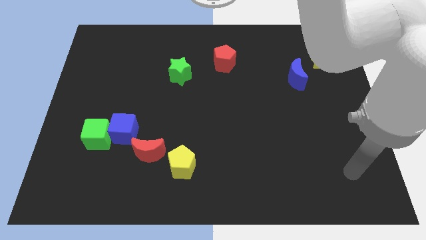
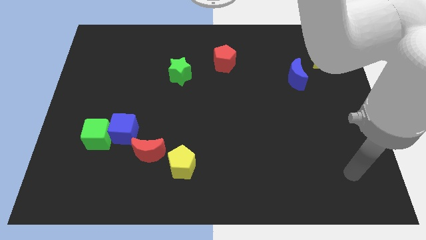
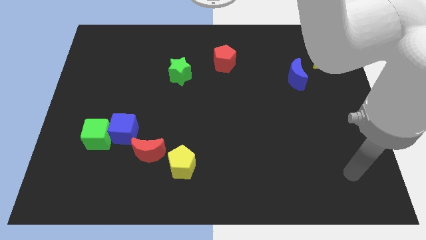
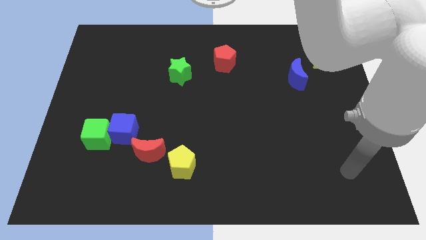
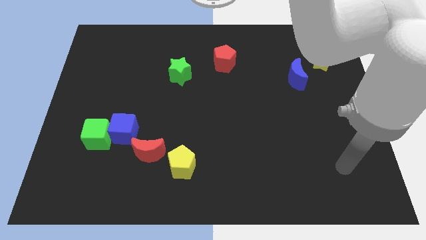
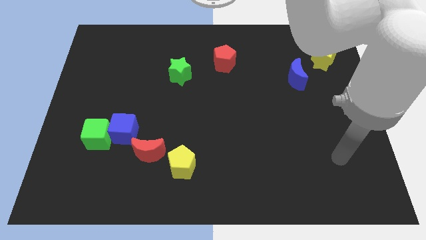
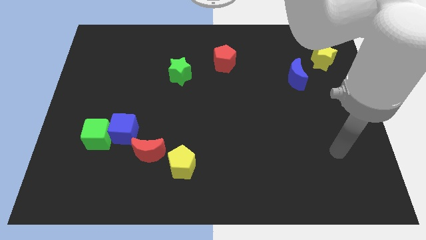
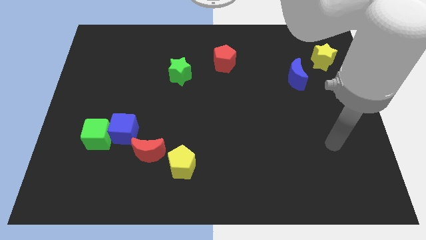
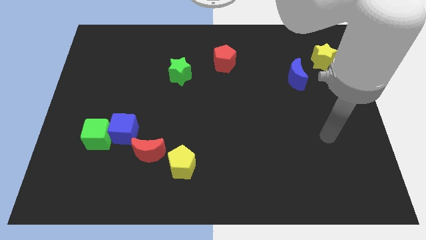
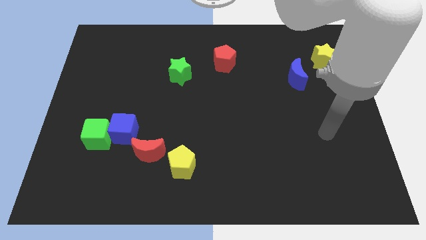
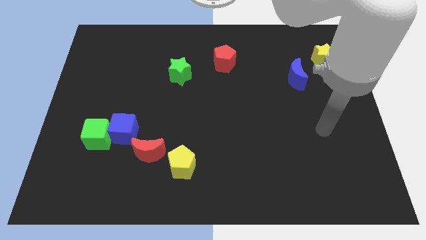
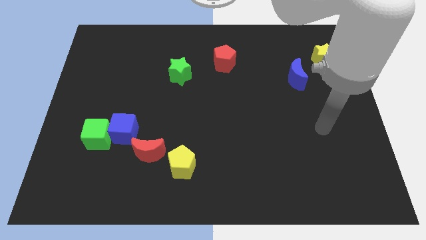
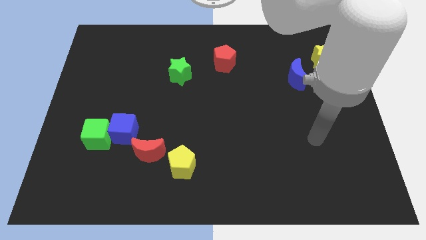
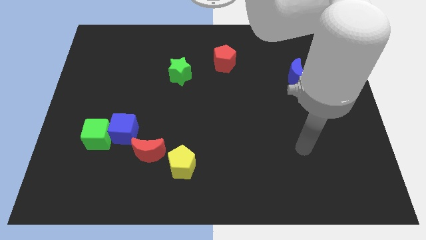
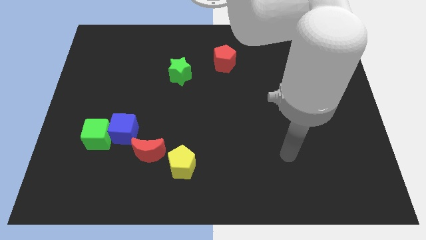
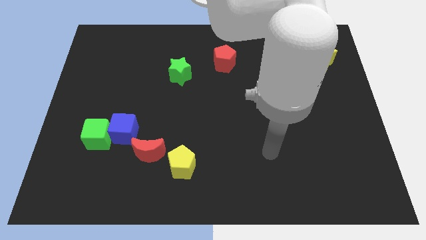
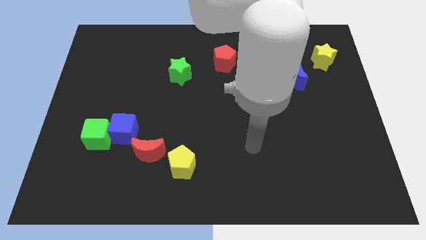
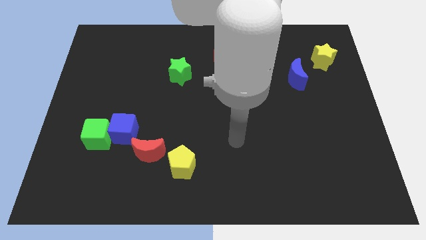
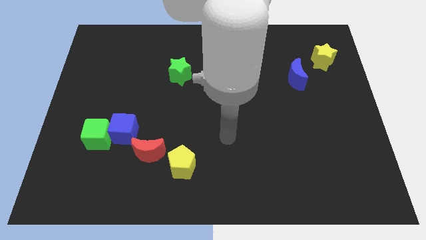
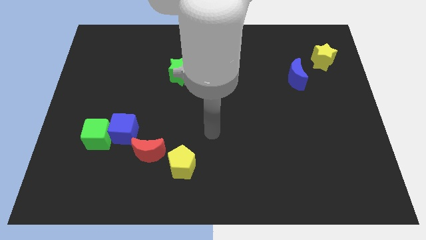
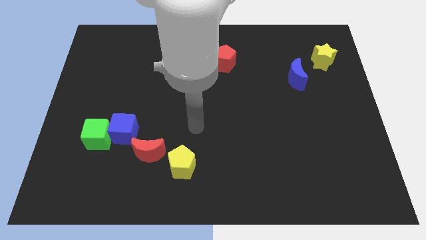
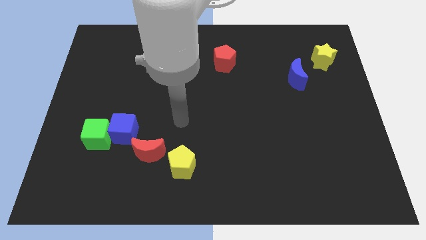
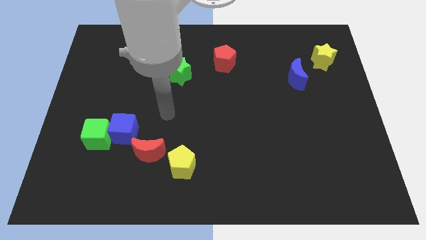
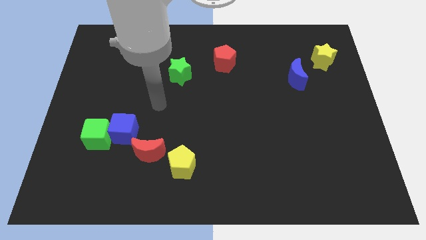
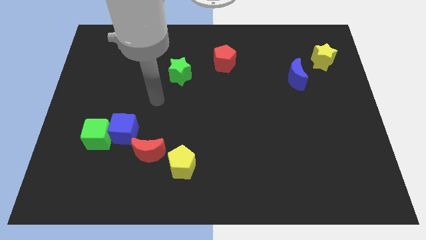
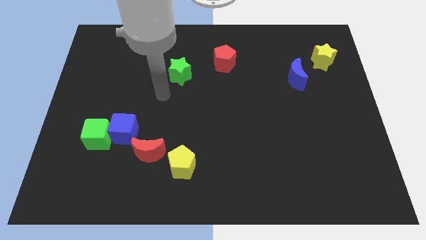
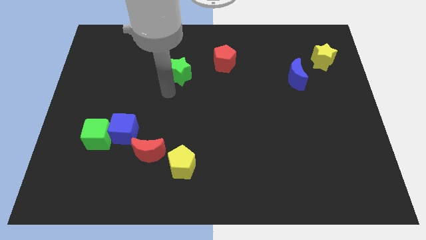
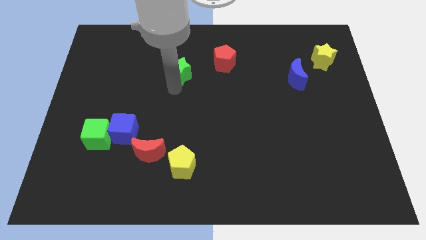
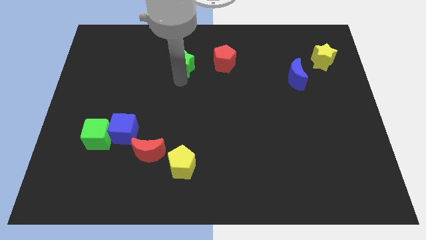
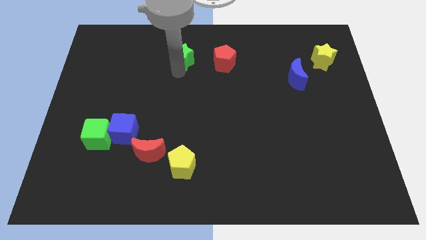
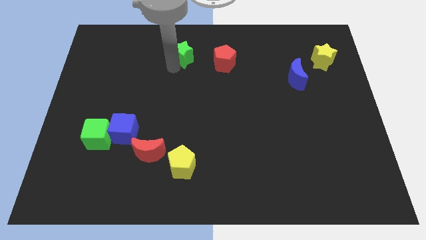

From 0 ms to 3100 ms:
move the green star parallel to the red pentagon

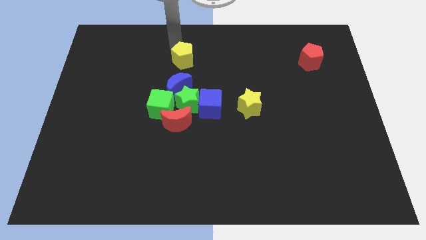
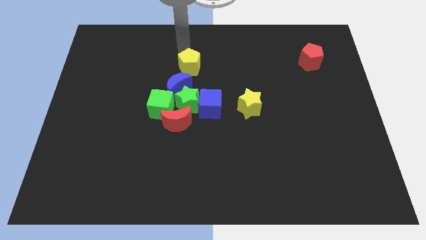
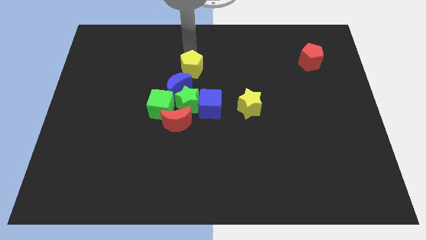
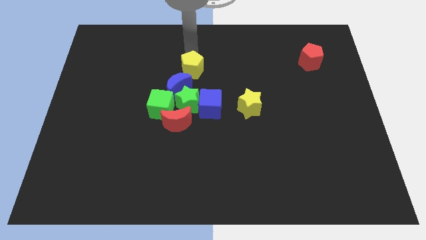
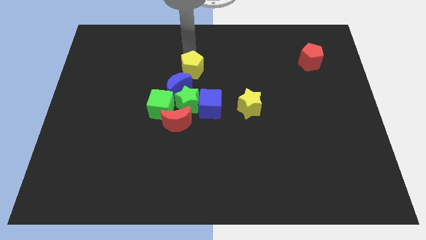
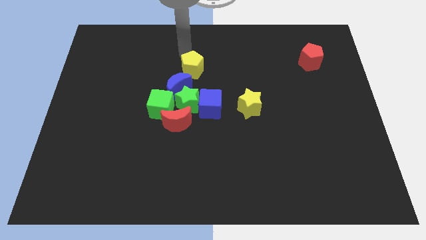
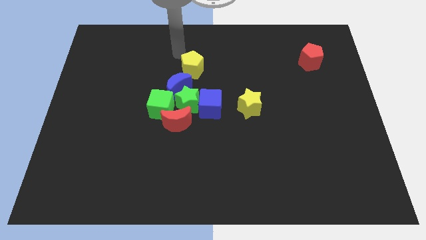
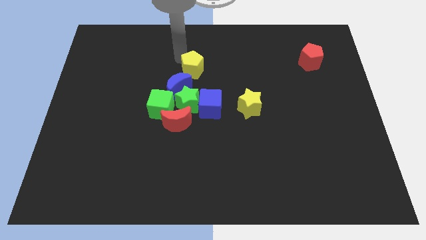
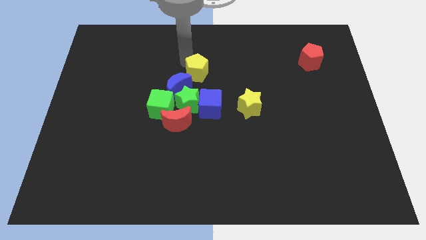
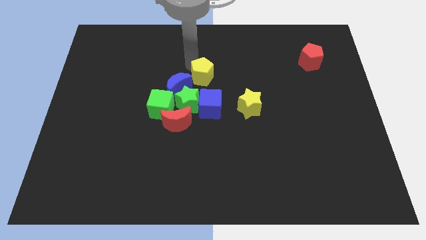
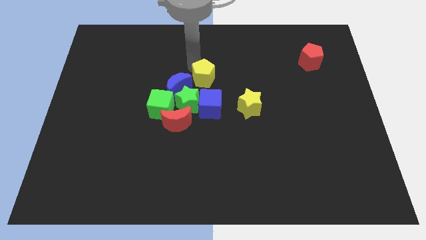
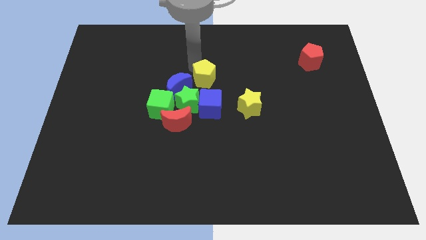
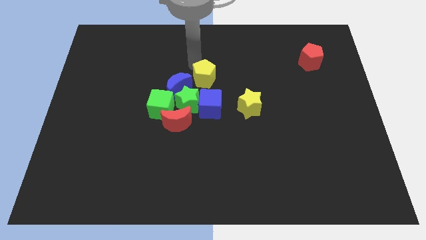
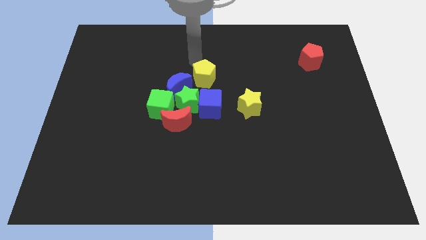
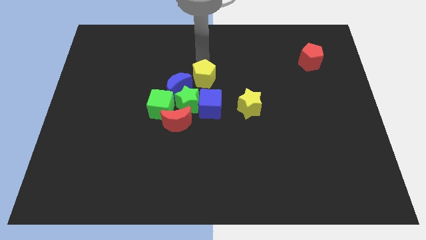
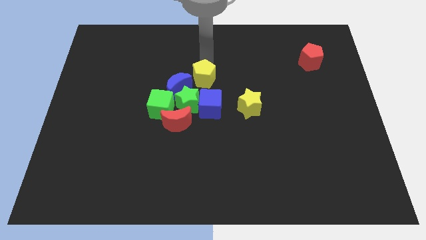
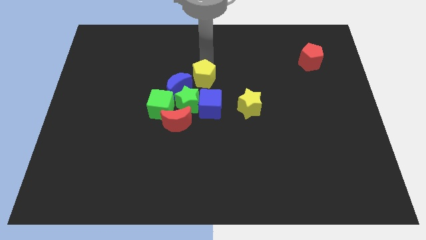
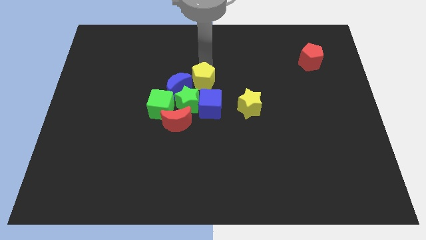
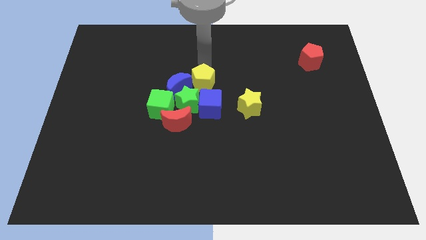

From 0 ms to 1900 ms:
push the yellow pentagon on to the left top of the blue cube

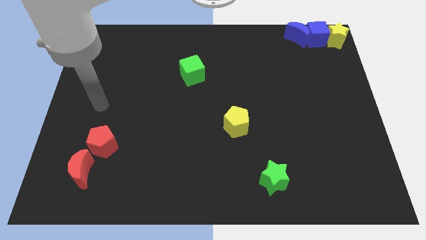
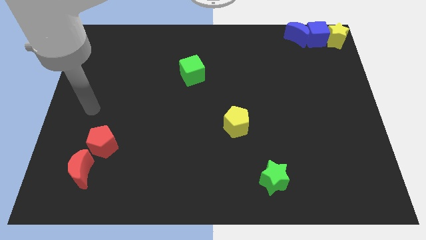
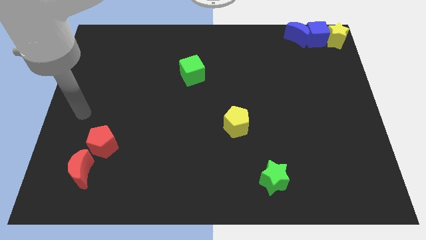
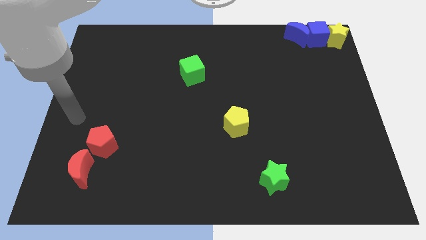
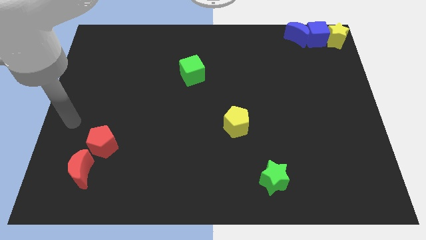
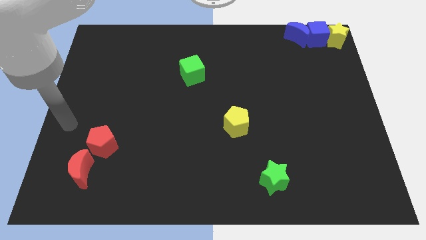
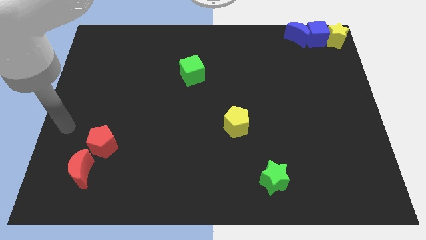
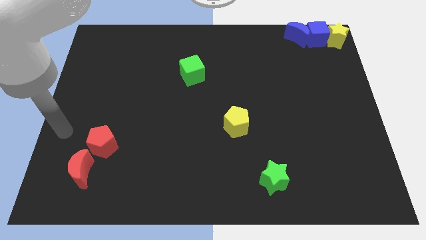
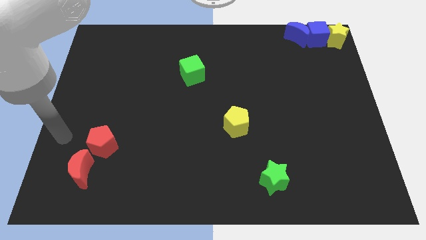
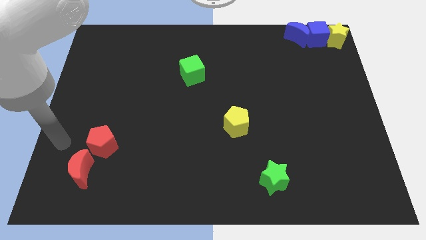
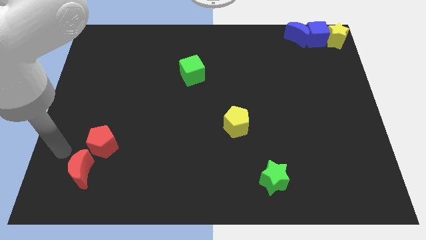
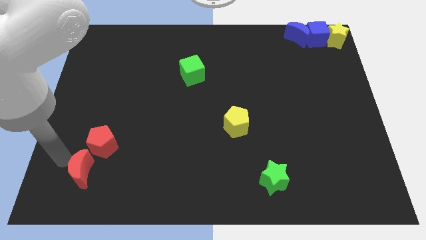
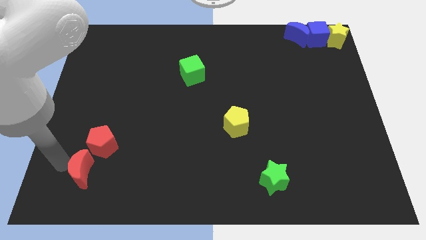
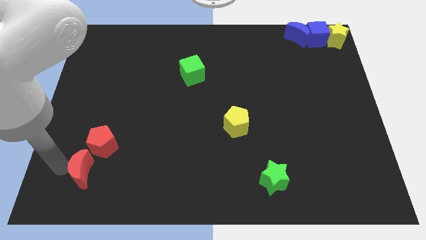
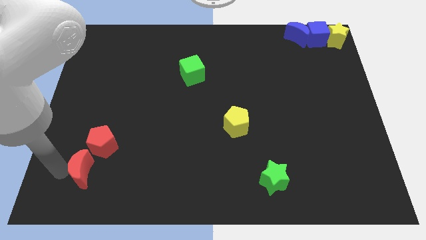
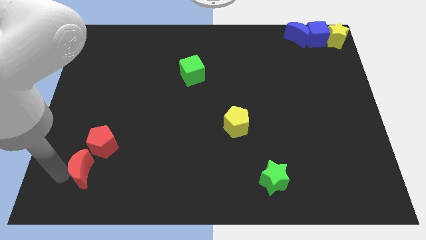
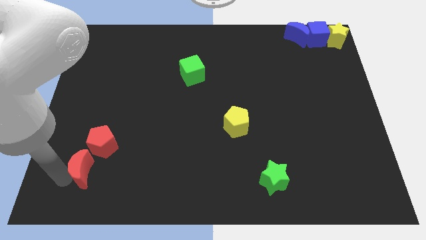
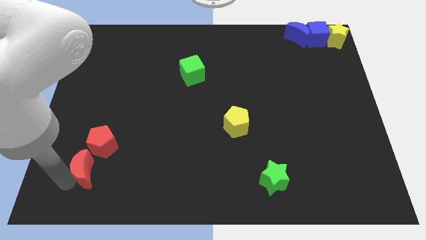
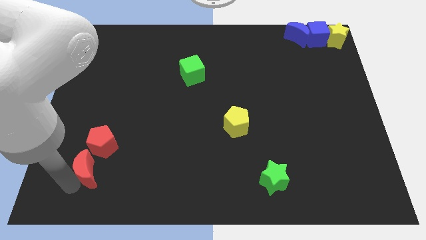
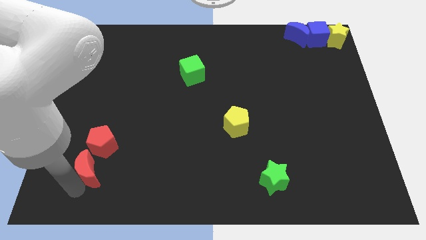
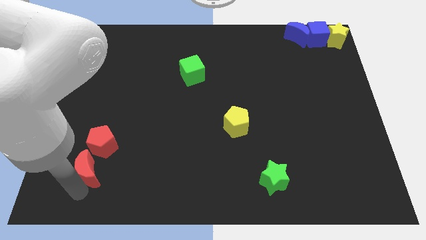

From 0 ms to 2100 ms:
turn red moon slightly

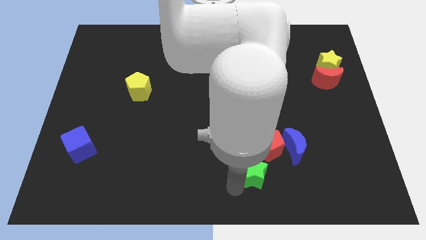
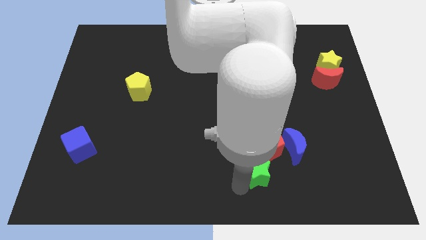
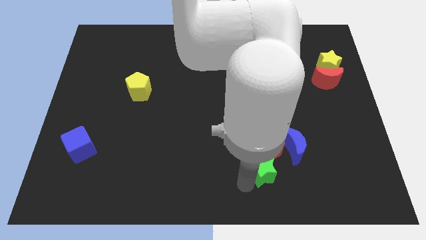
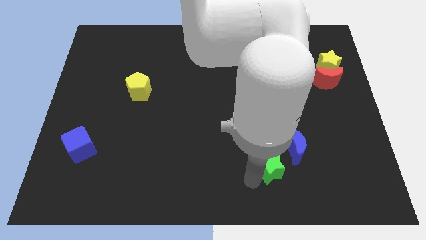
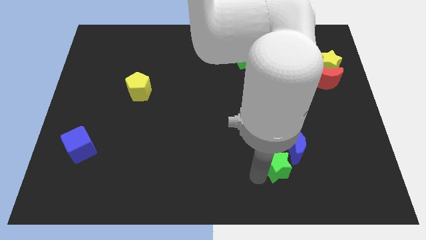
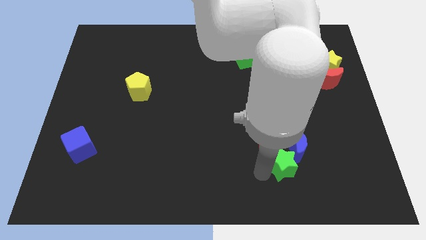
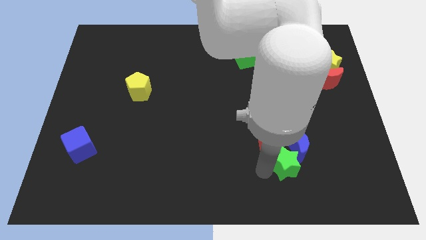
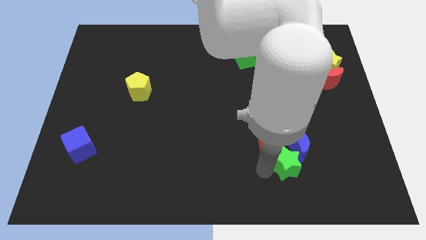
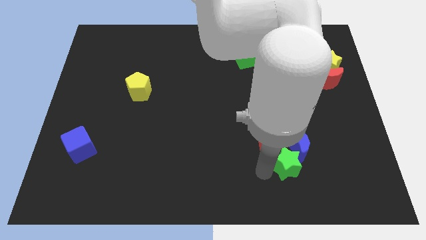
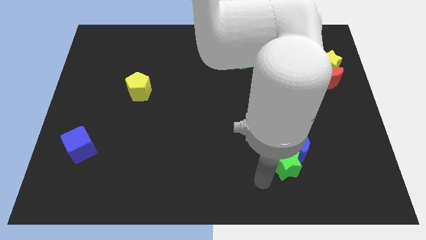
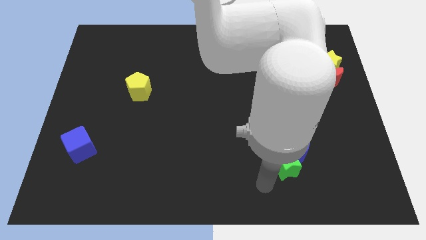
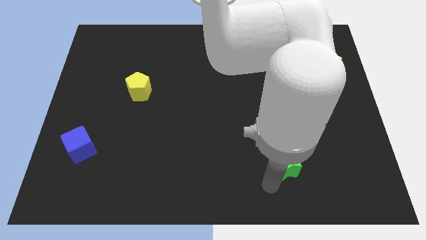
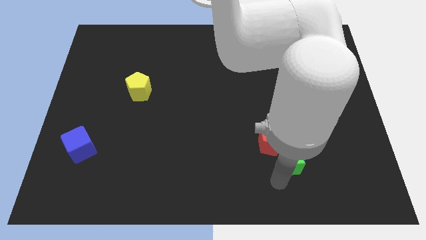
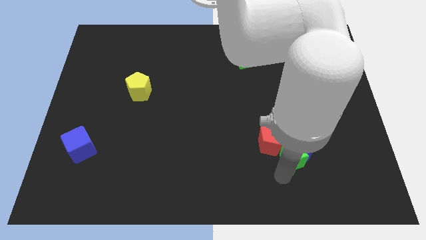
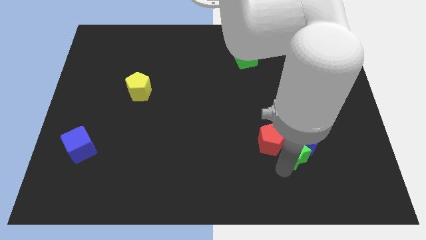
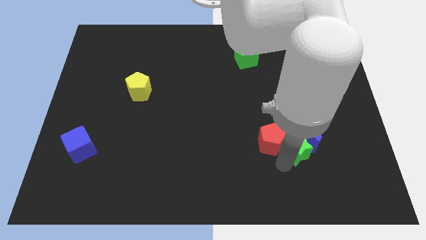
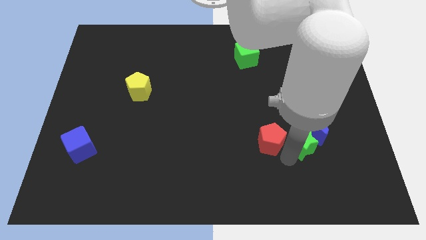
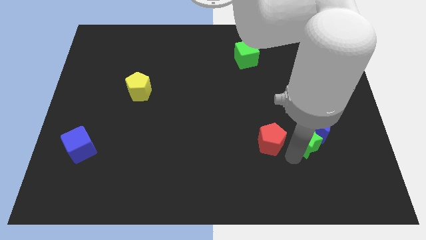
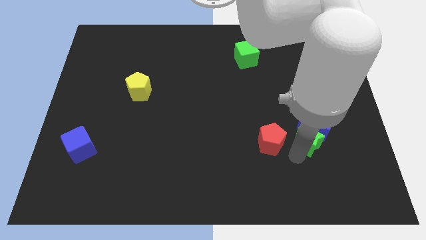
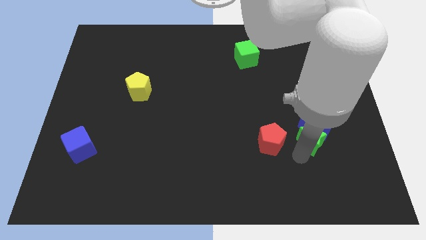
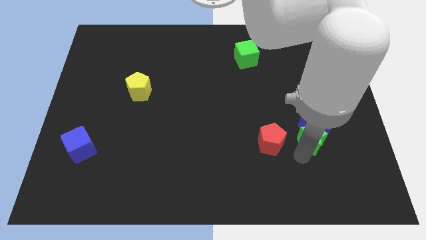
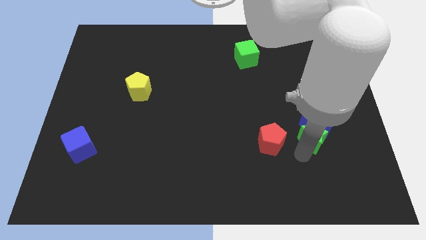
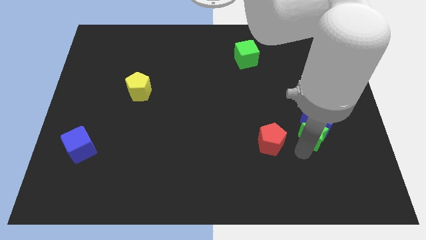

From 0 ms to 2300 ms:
push the green star into the blue moon
